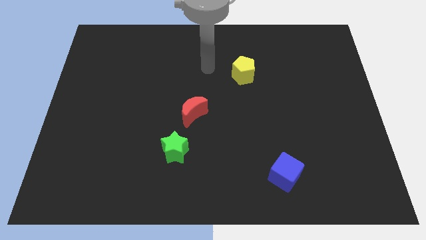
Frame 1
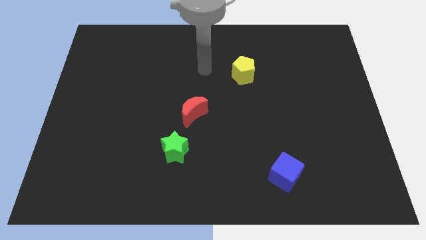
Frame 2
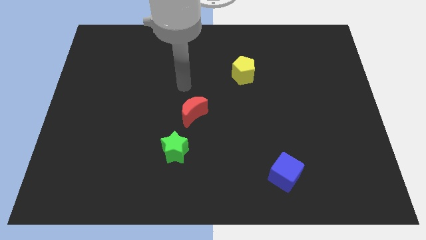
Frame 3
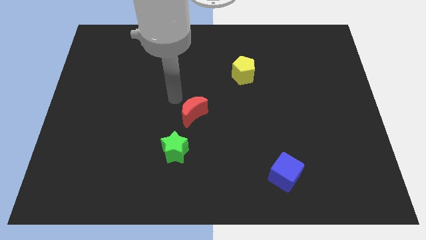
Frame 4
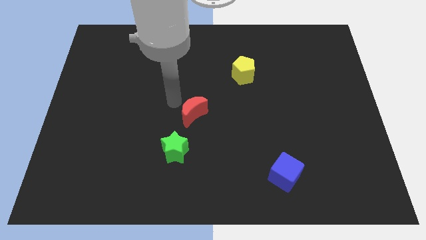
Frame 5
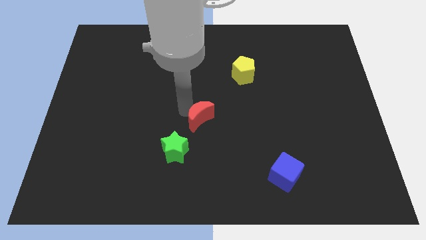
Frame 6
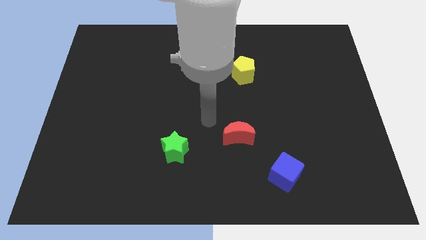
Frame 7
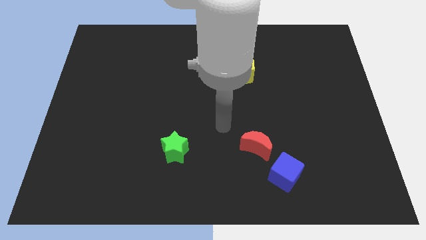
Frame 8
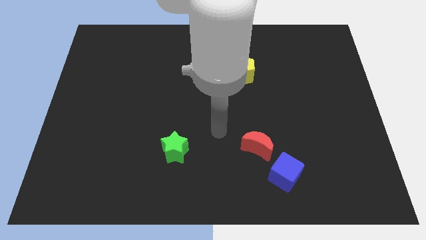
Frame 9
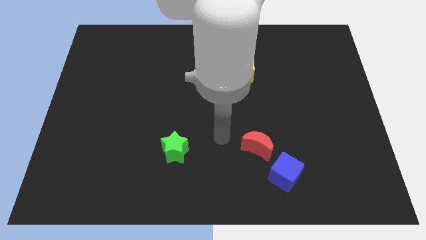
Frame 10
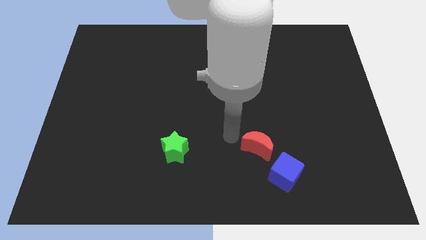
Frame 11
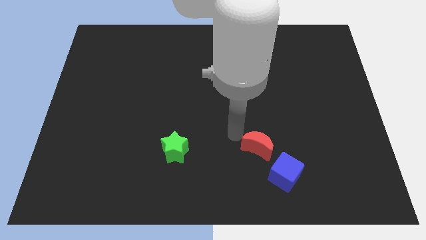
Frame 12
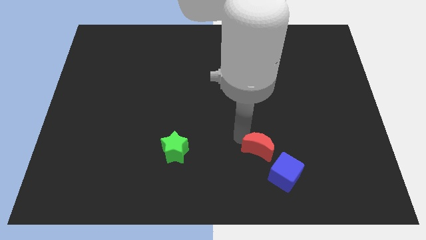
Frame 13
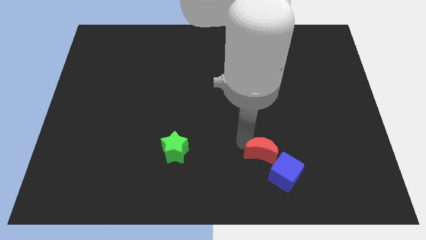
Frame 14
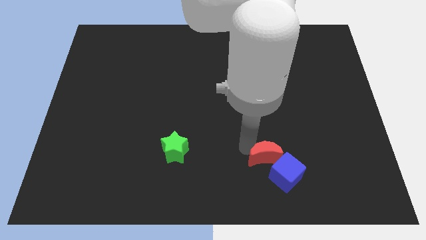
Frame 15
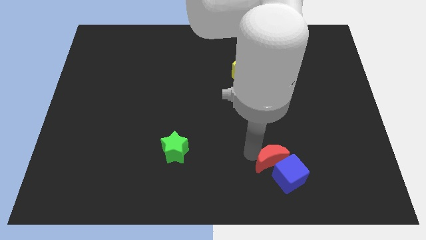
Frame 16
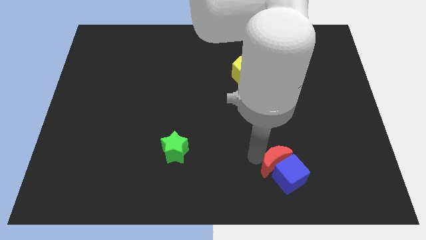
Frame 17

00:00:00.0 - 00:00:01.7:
slide the red block next to the blue block

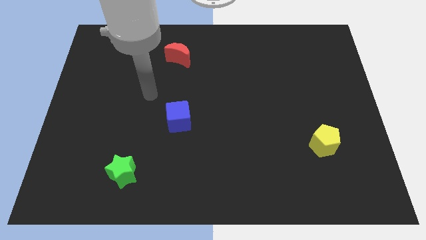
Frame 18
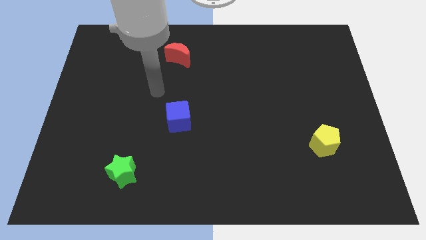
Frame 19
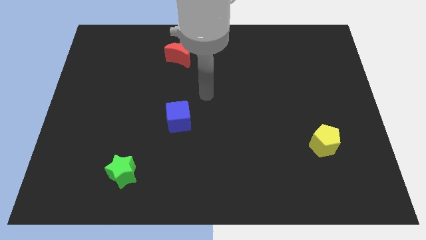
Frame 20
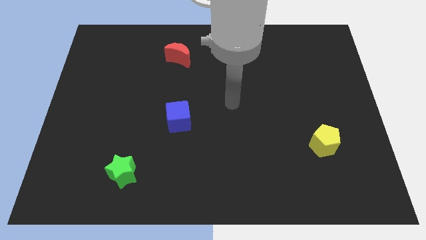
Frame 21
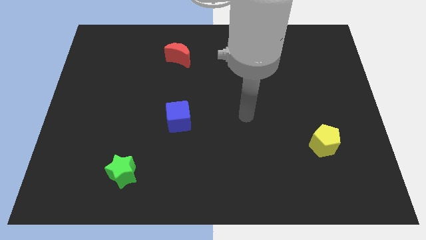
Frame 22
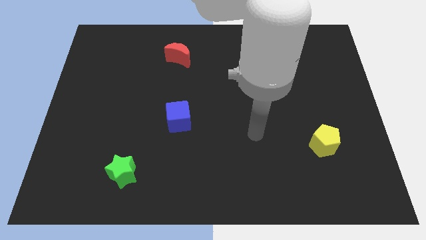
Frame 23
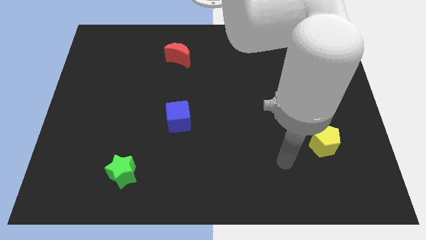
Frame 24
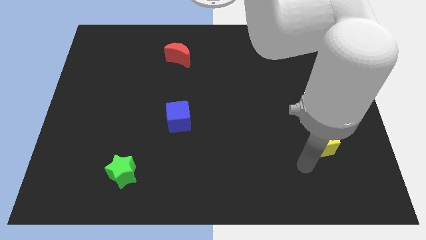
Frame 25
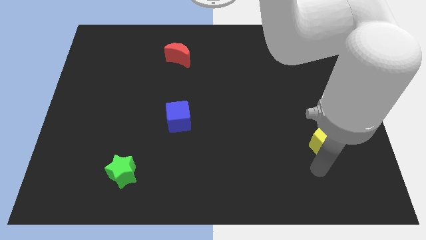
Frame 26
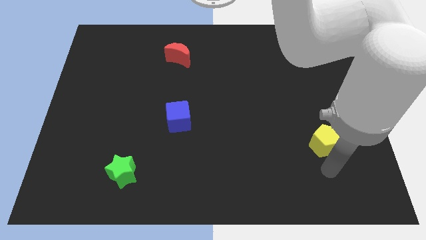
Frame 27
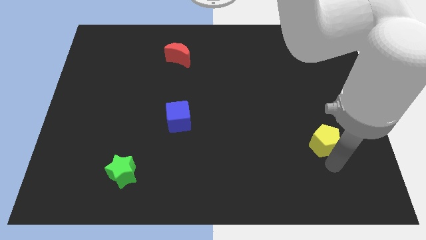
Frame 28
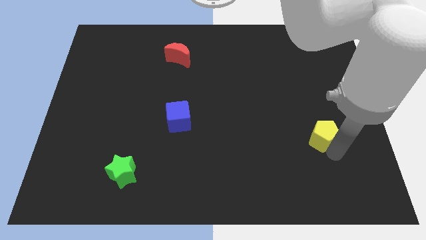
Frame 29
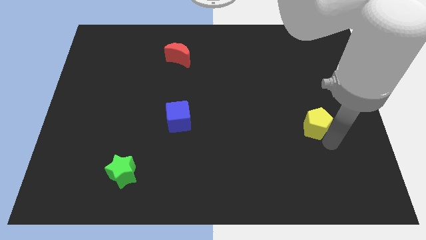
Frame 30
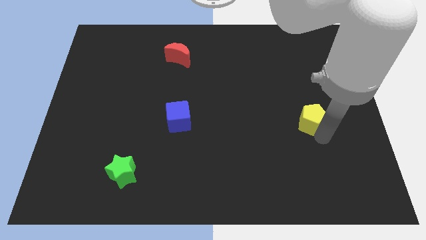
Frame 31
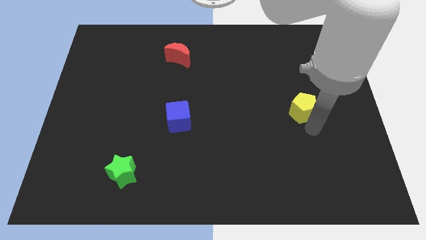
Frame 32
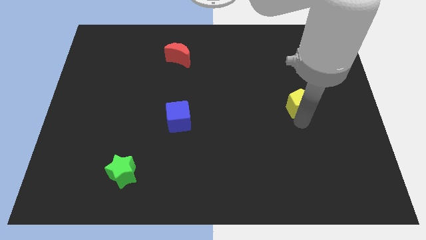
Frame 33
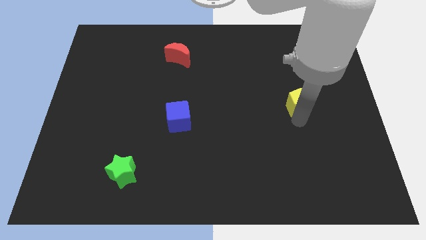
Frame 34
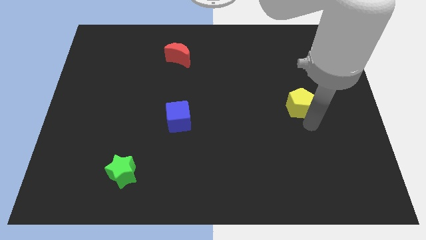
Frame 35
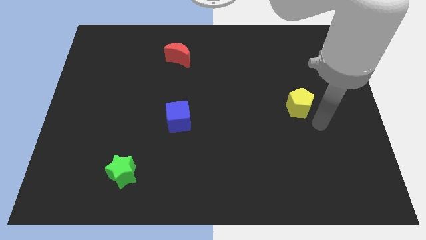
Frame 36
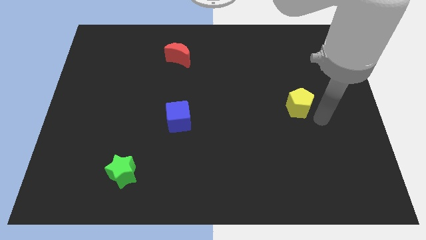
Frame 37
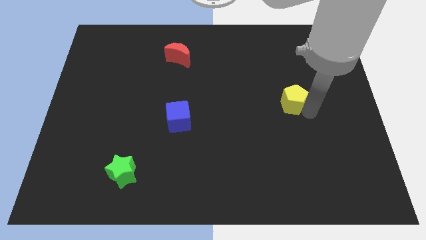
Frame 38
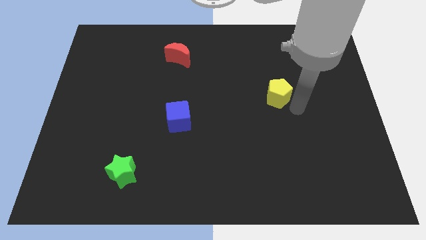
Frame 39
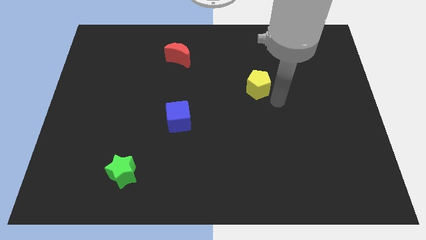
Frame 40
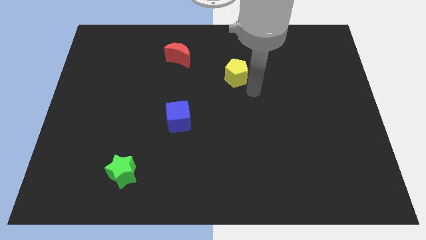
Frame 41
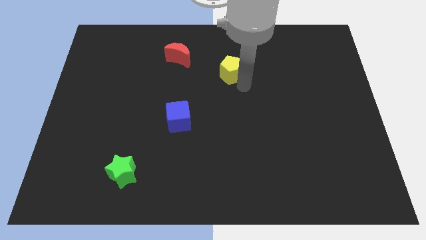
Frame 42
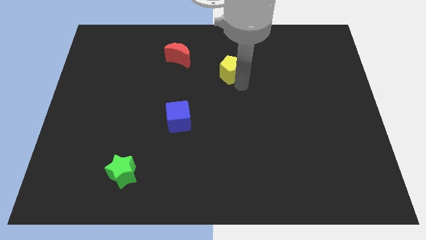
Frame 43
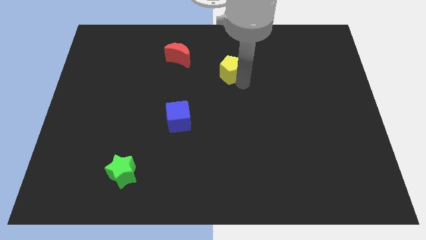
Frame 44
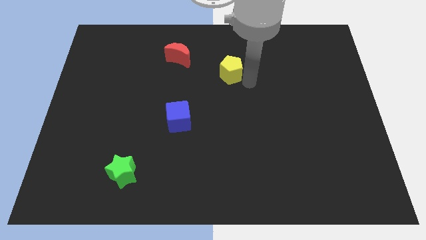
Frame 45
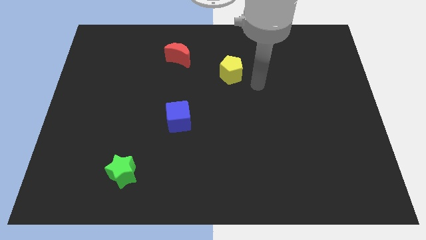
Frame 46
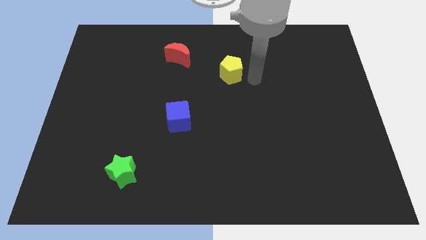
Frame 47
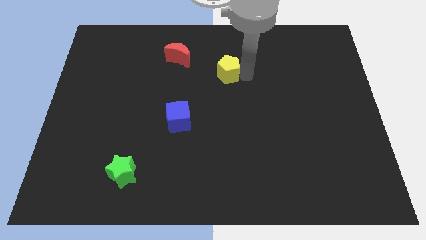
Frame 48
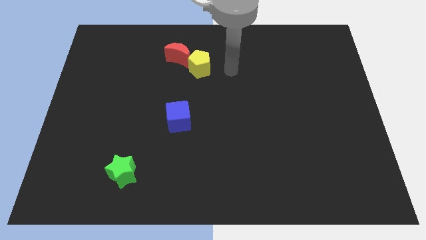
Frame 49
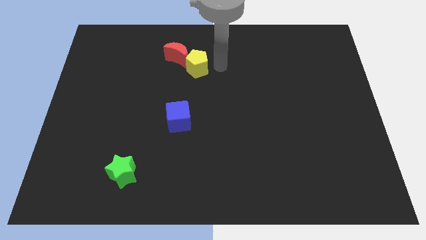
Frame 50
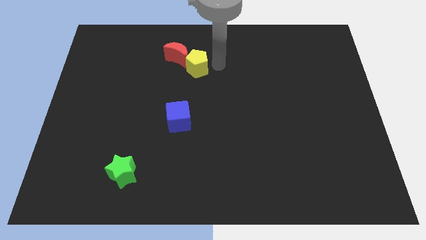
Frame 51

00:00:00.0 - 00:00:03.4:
push the pentagon close to the moon

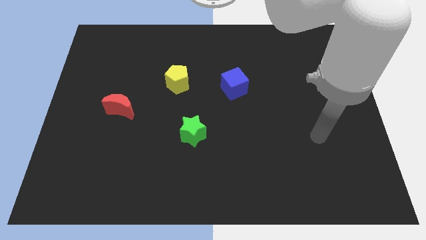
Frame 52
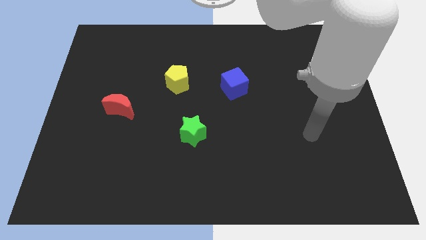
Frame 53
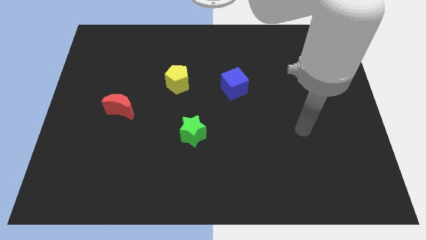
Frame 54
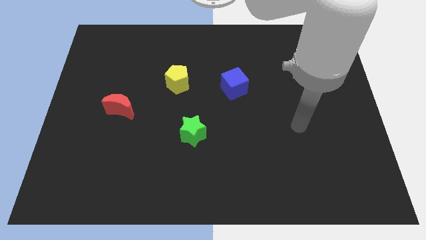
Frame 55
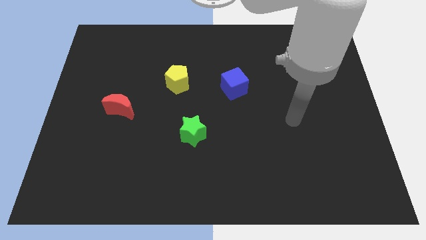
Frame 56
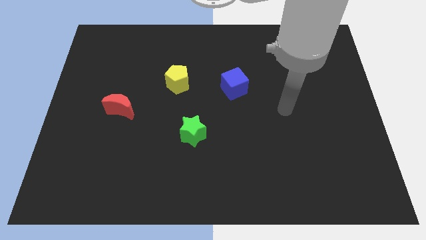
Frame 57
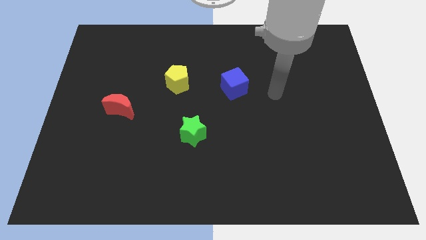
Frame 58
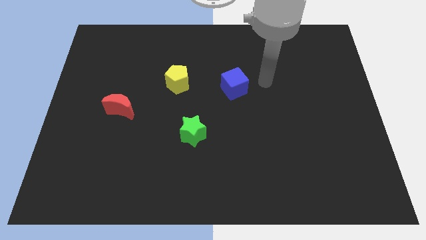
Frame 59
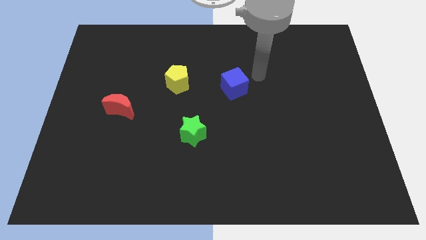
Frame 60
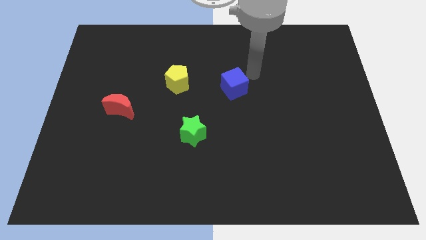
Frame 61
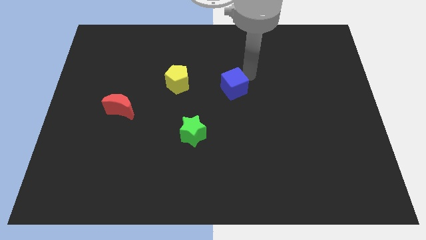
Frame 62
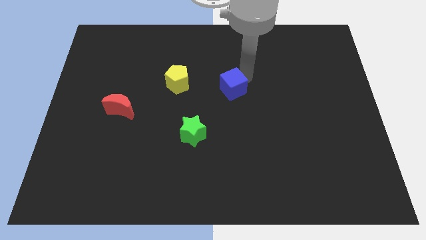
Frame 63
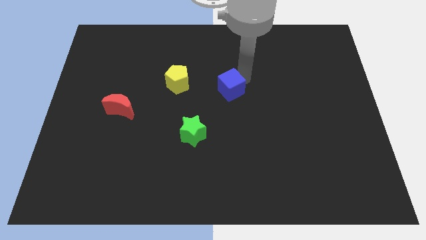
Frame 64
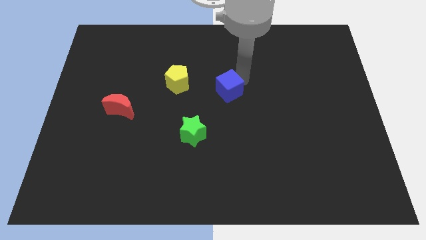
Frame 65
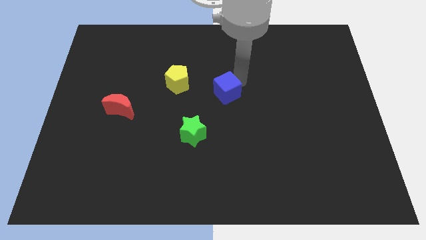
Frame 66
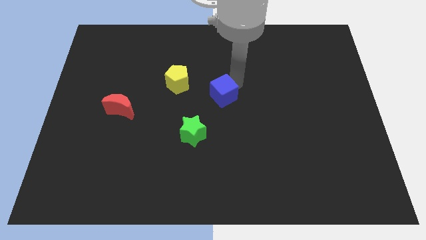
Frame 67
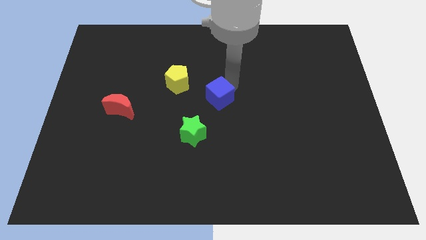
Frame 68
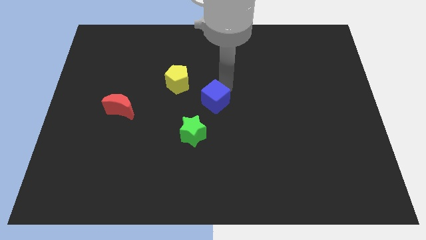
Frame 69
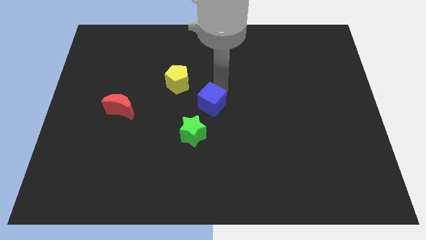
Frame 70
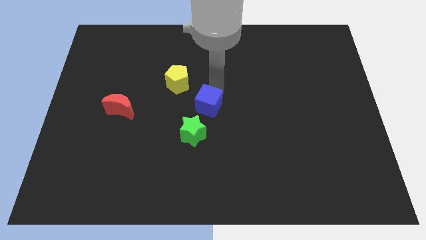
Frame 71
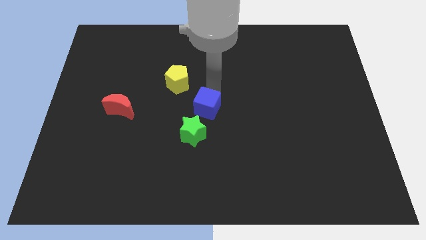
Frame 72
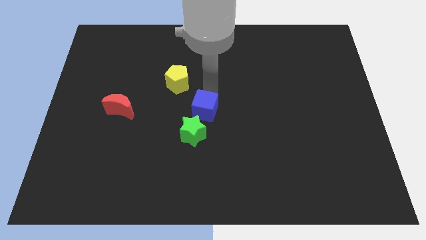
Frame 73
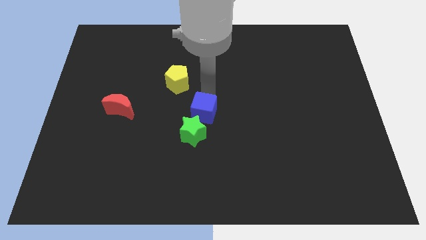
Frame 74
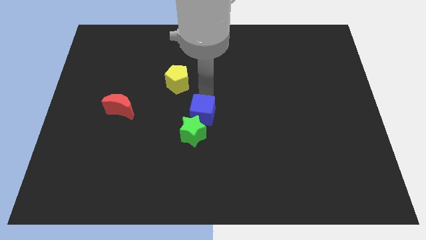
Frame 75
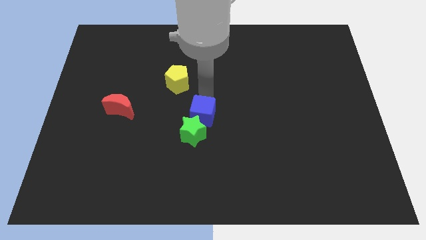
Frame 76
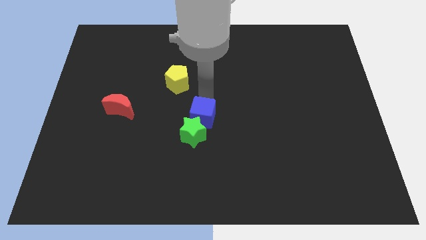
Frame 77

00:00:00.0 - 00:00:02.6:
push the cube to the green block

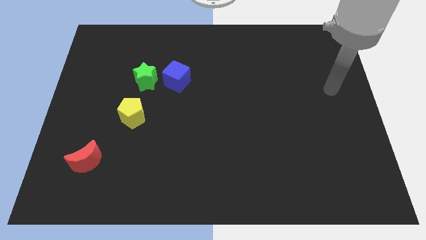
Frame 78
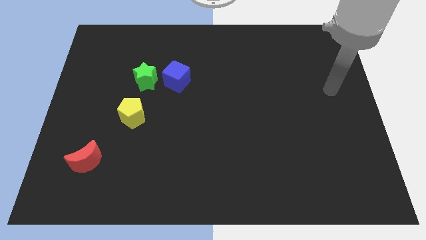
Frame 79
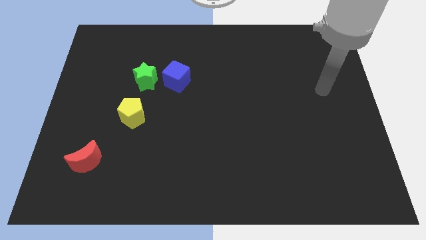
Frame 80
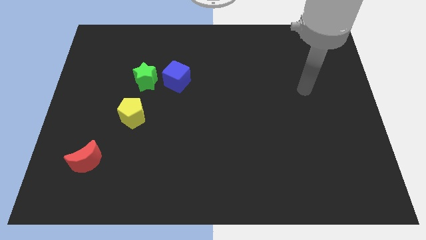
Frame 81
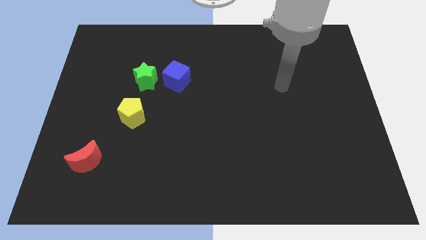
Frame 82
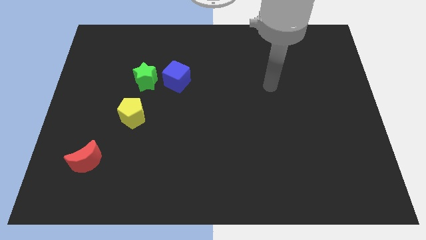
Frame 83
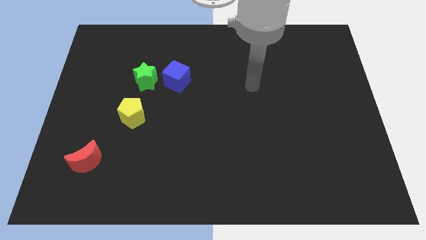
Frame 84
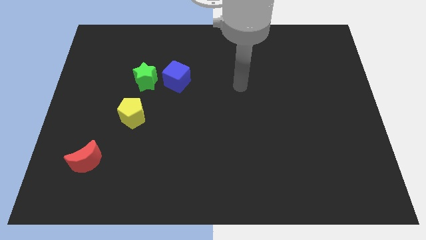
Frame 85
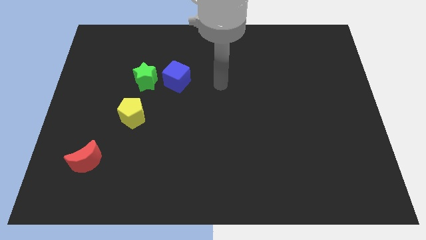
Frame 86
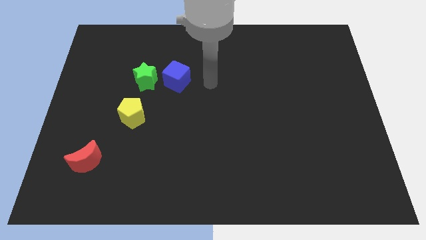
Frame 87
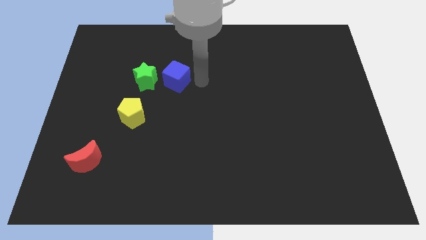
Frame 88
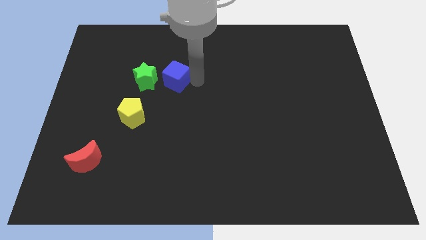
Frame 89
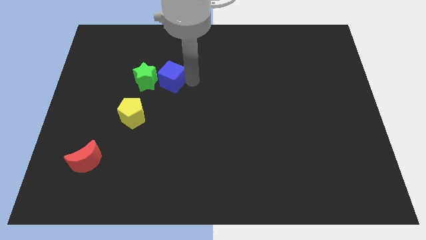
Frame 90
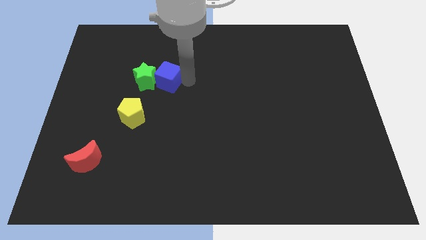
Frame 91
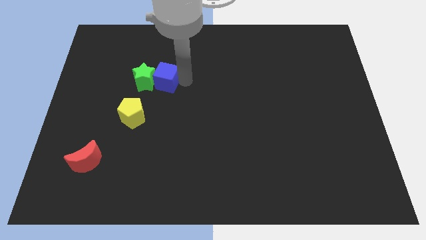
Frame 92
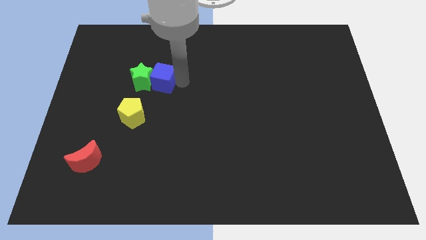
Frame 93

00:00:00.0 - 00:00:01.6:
push the blue block towards the star
